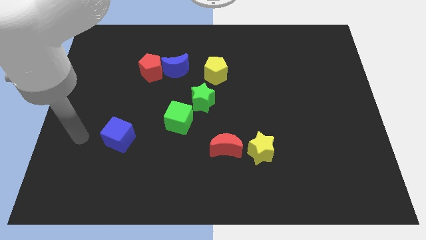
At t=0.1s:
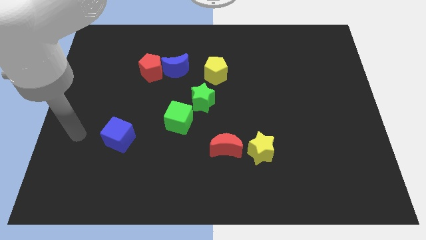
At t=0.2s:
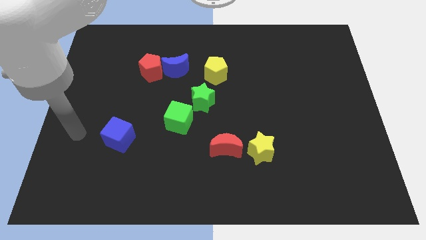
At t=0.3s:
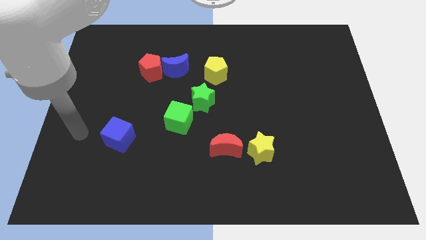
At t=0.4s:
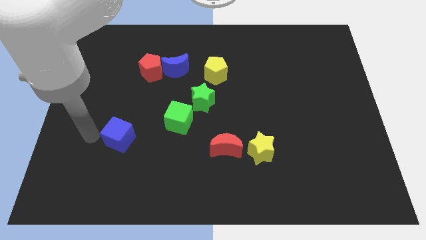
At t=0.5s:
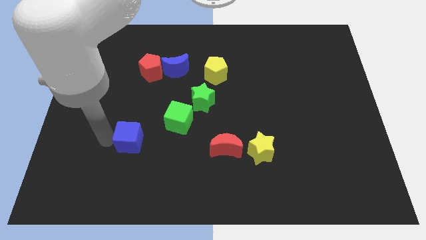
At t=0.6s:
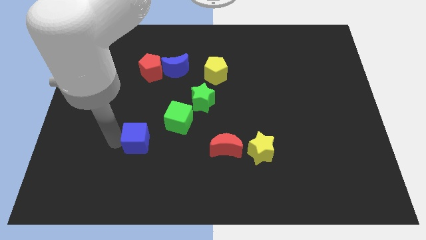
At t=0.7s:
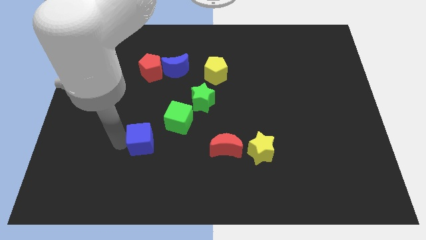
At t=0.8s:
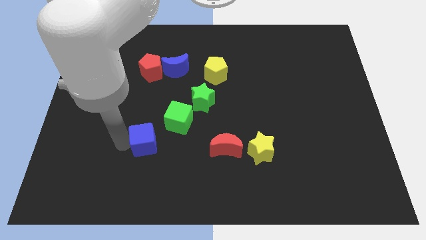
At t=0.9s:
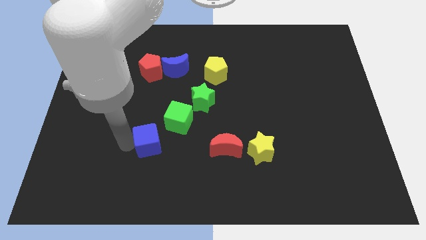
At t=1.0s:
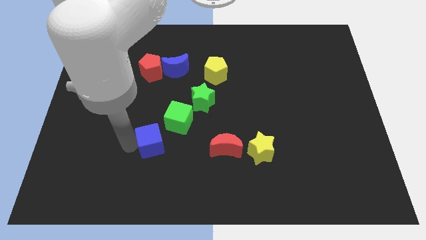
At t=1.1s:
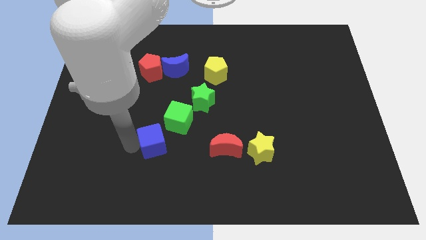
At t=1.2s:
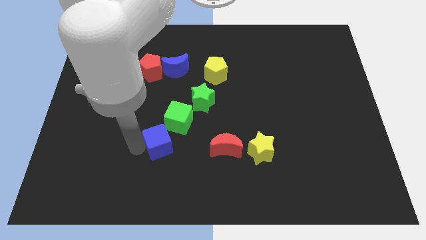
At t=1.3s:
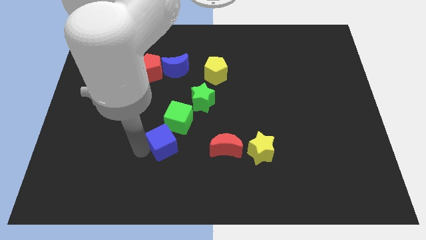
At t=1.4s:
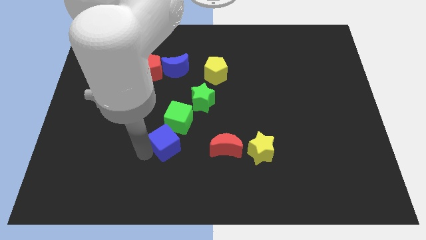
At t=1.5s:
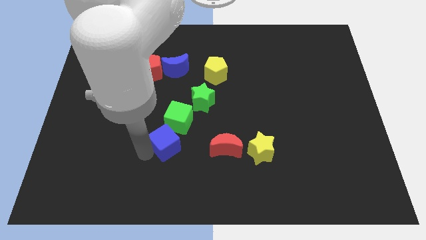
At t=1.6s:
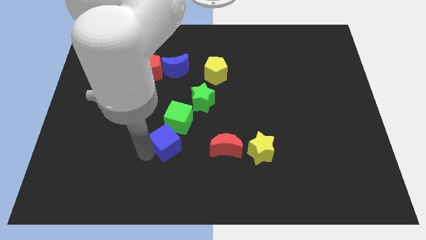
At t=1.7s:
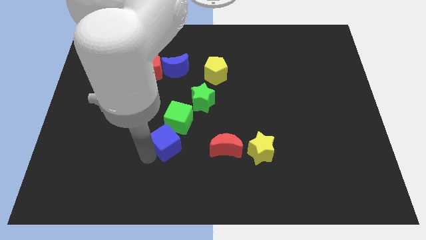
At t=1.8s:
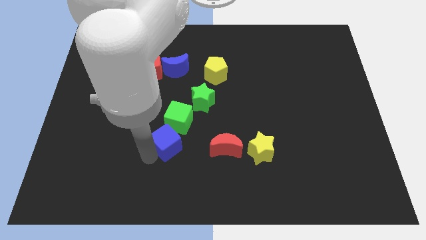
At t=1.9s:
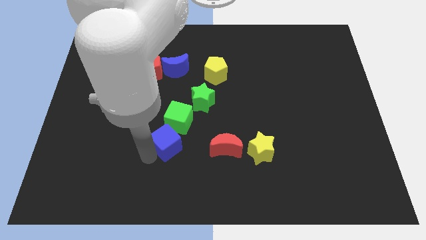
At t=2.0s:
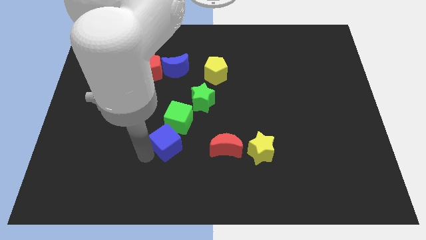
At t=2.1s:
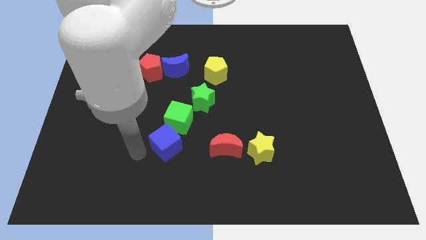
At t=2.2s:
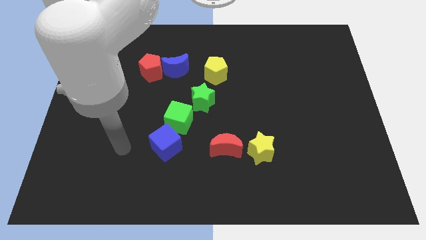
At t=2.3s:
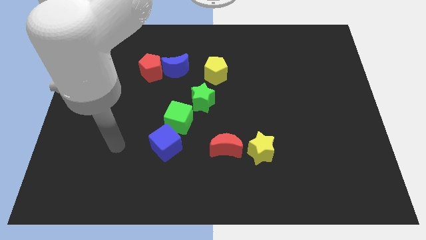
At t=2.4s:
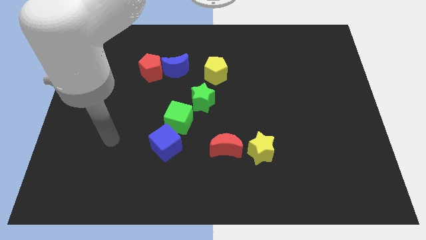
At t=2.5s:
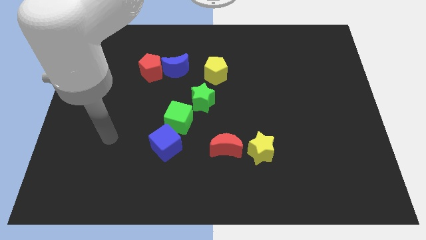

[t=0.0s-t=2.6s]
place blue cube below green cube

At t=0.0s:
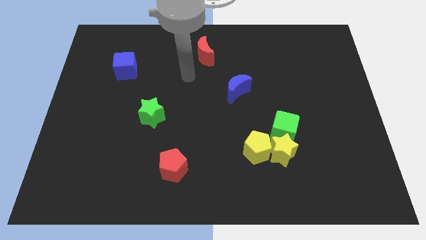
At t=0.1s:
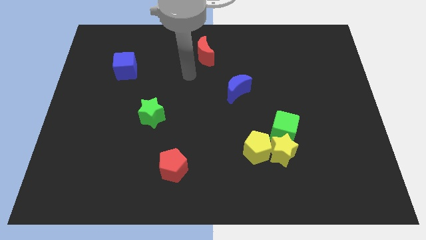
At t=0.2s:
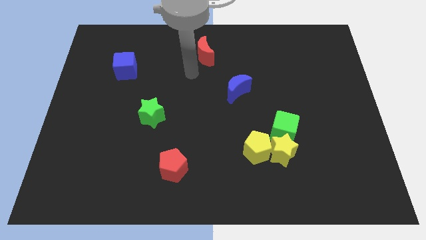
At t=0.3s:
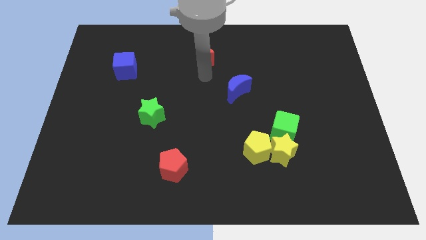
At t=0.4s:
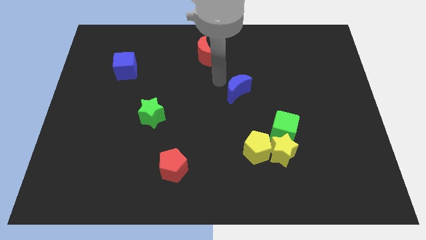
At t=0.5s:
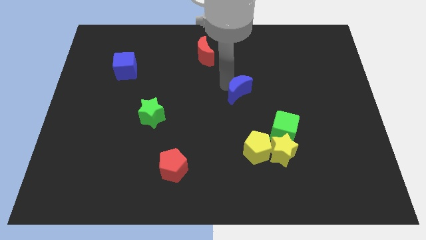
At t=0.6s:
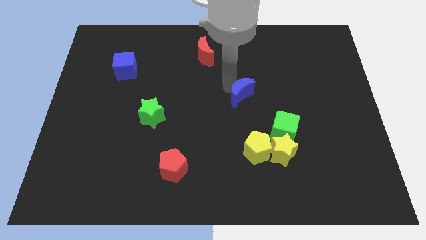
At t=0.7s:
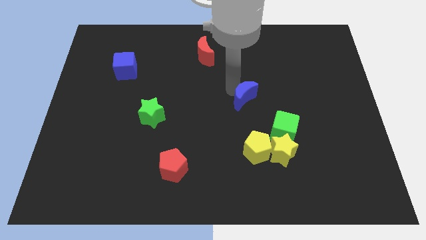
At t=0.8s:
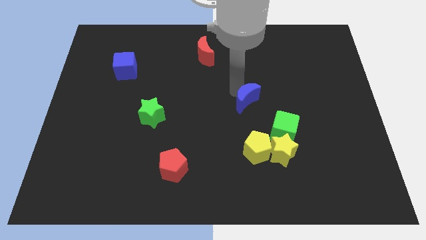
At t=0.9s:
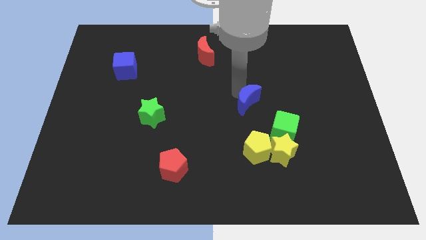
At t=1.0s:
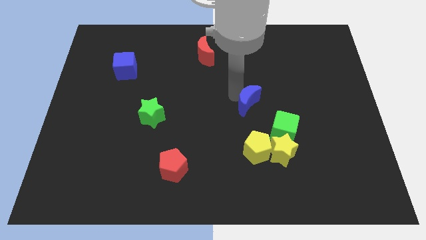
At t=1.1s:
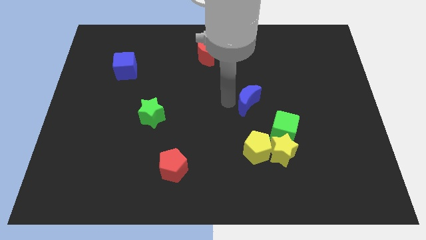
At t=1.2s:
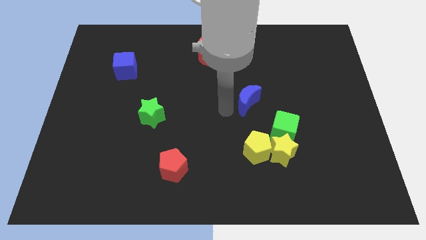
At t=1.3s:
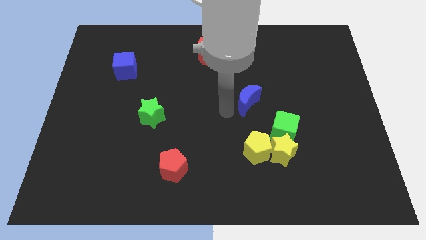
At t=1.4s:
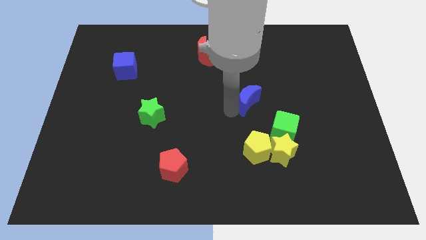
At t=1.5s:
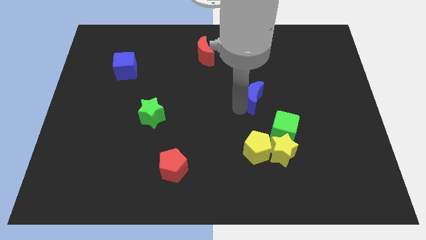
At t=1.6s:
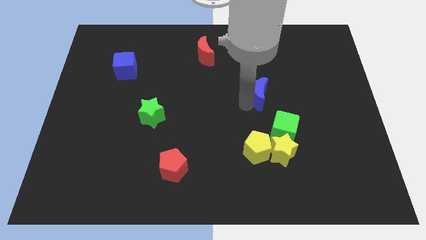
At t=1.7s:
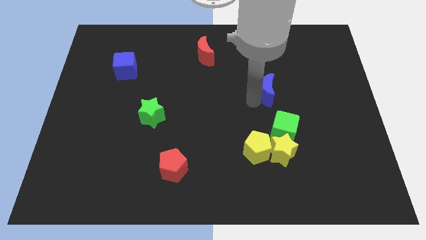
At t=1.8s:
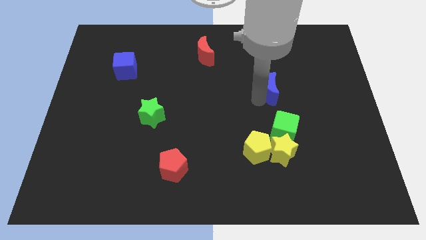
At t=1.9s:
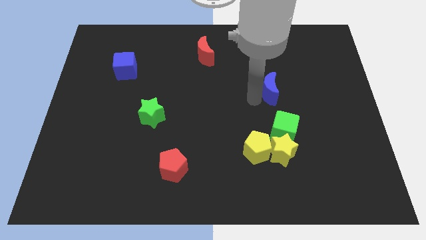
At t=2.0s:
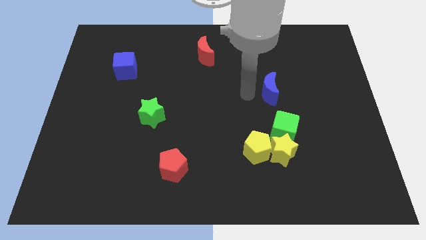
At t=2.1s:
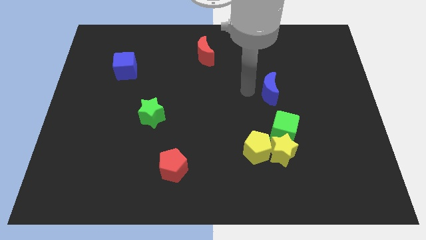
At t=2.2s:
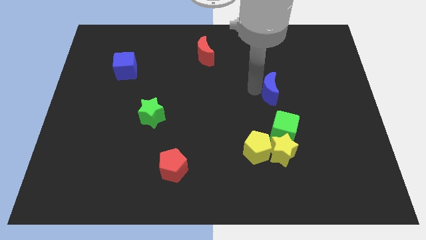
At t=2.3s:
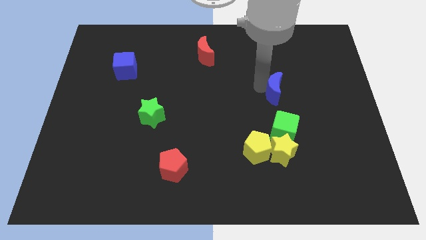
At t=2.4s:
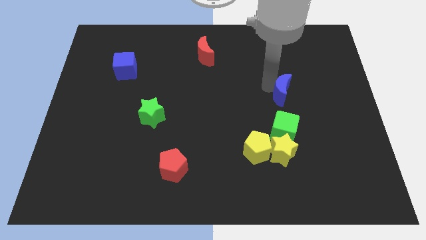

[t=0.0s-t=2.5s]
move the blue moon above the green cube

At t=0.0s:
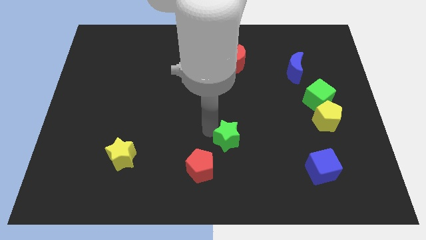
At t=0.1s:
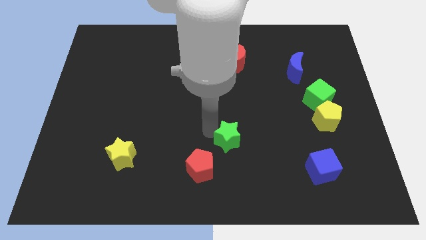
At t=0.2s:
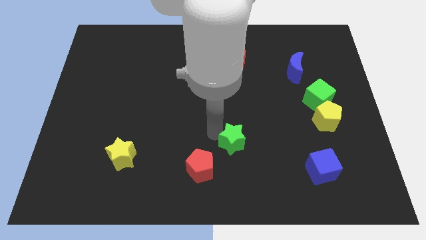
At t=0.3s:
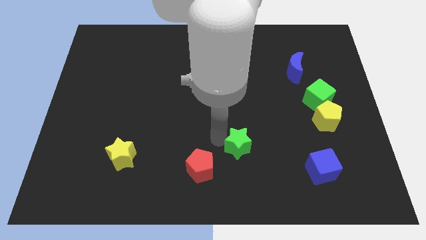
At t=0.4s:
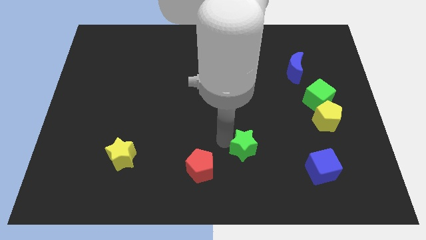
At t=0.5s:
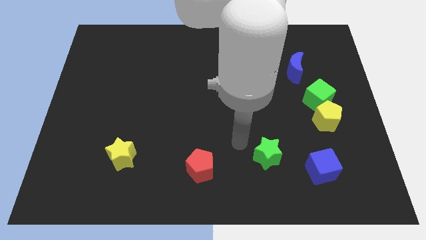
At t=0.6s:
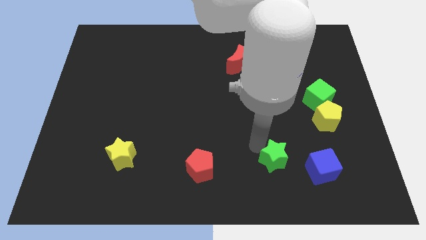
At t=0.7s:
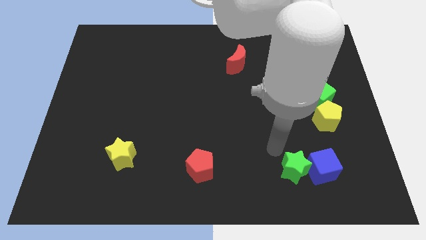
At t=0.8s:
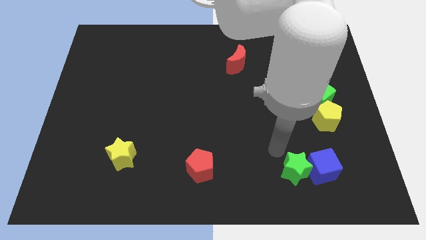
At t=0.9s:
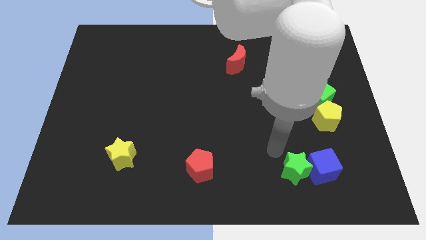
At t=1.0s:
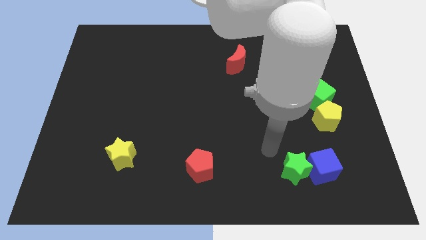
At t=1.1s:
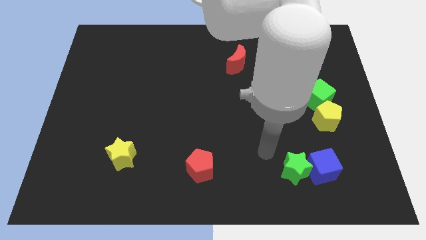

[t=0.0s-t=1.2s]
move the green star into the blue cube

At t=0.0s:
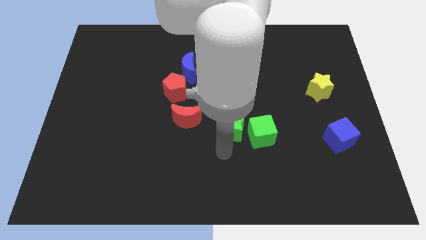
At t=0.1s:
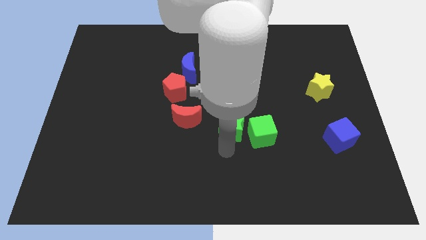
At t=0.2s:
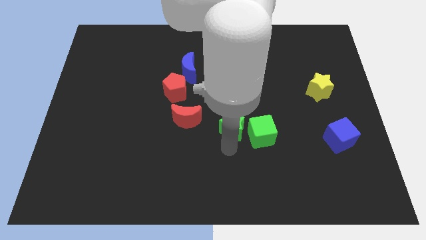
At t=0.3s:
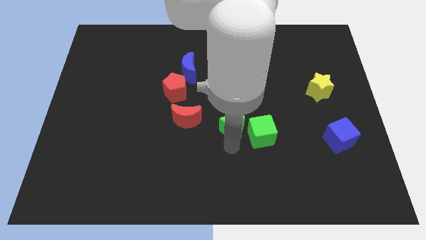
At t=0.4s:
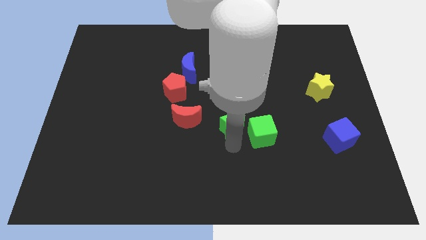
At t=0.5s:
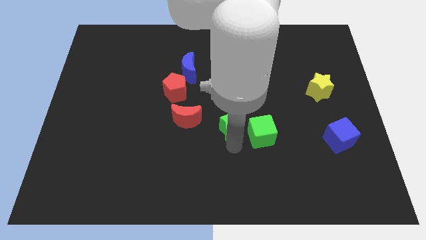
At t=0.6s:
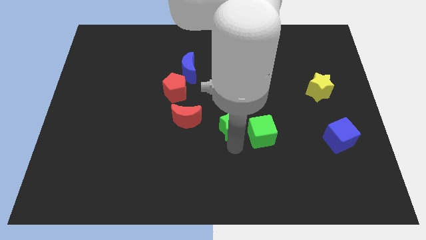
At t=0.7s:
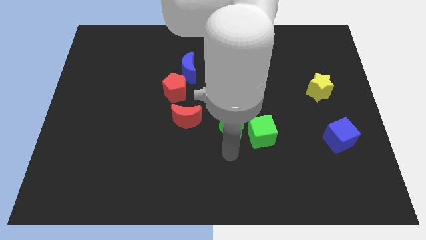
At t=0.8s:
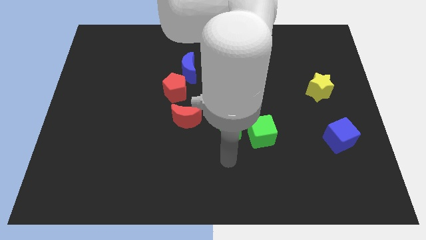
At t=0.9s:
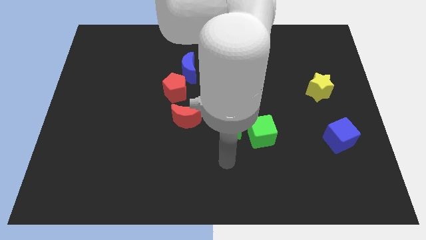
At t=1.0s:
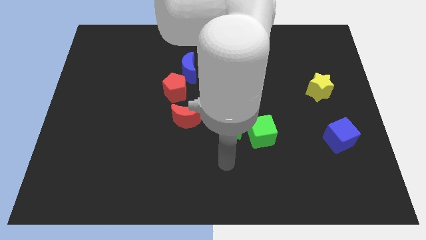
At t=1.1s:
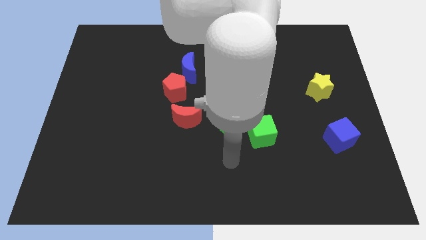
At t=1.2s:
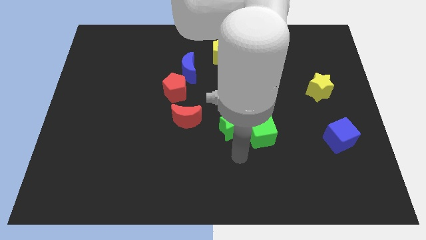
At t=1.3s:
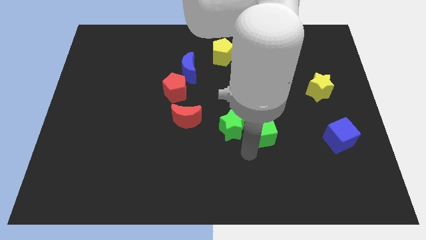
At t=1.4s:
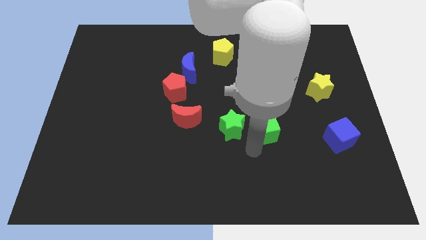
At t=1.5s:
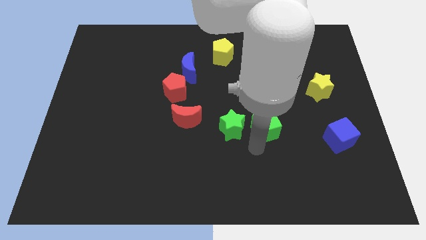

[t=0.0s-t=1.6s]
push the green cube to the right side of the green star

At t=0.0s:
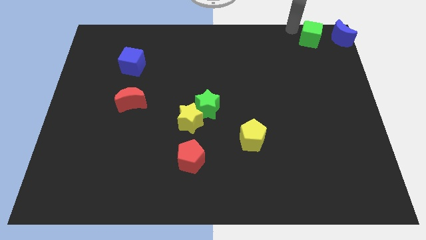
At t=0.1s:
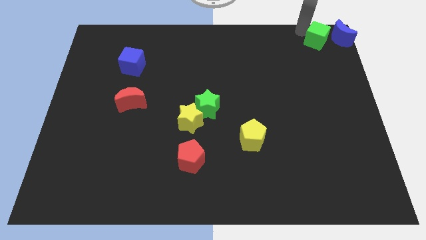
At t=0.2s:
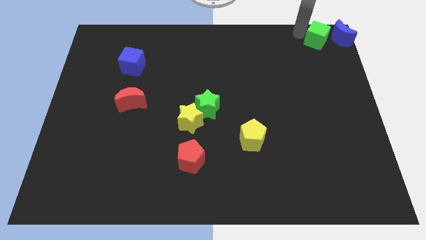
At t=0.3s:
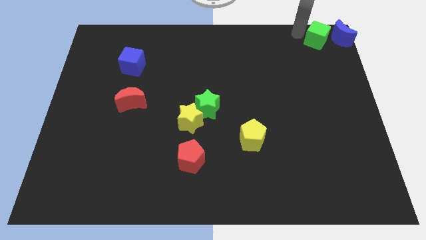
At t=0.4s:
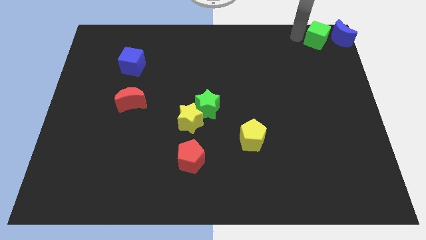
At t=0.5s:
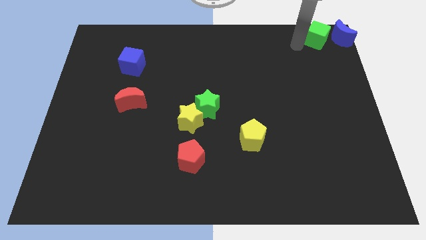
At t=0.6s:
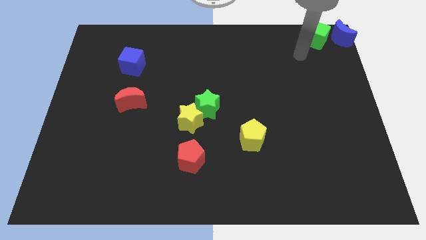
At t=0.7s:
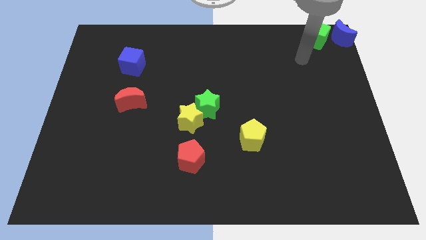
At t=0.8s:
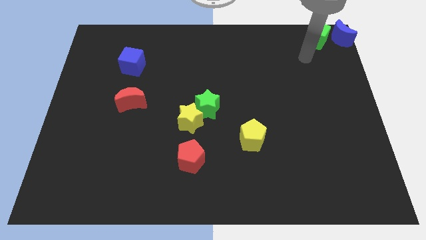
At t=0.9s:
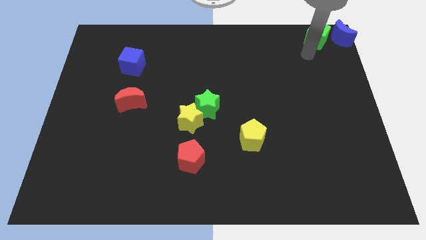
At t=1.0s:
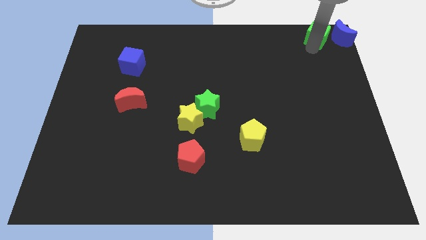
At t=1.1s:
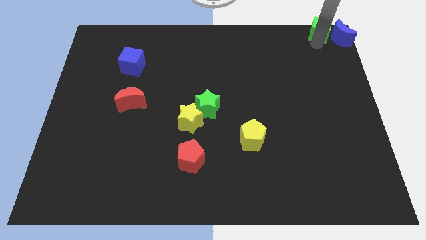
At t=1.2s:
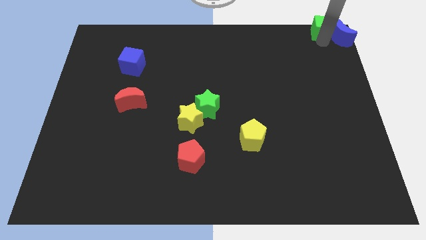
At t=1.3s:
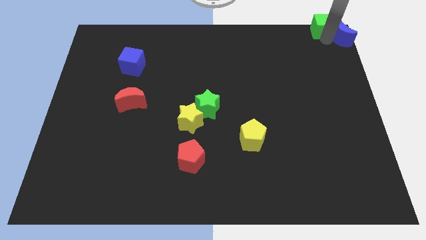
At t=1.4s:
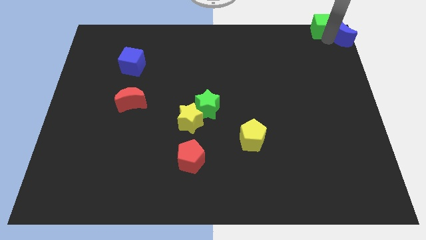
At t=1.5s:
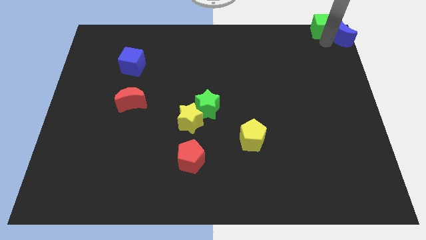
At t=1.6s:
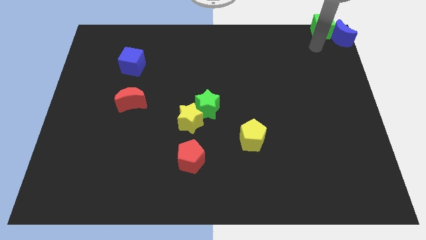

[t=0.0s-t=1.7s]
move the green cube in to the blue moon
